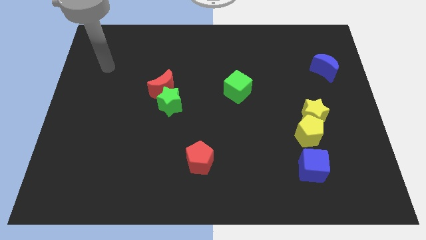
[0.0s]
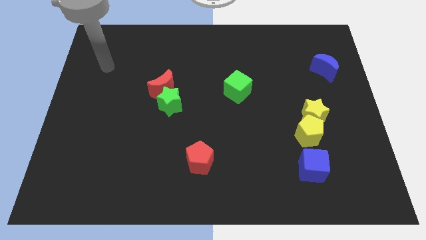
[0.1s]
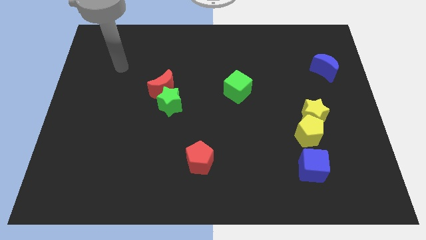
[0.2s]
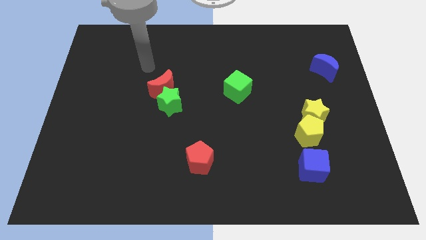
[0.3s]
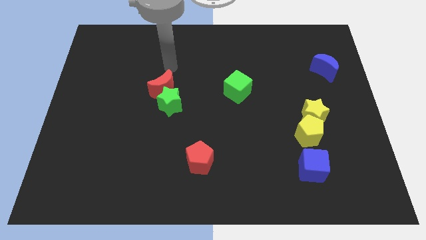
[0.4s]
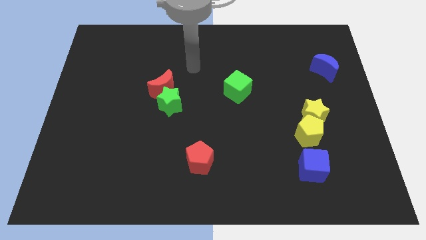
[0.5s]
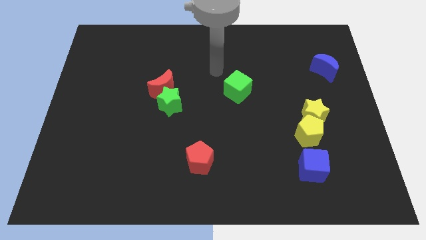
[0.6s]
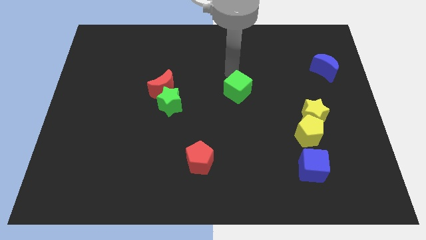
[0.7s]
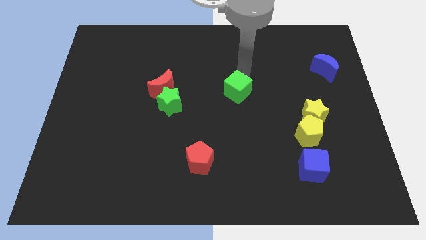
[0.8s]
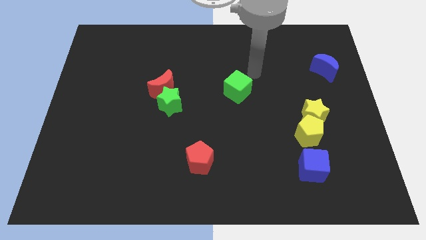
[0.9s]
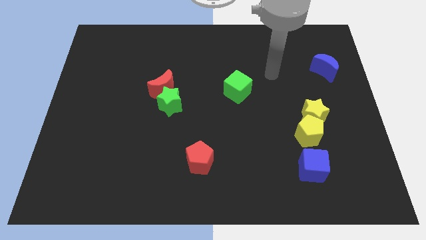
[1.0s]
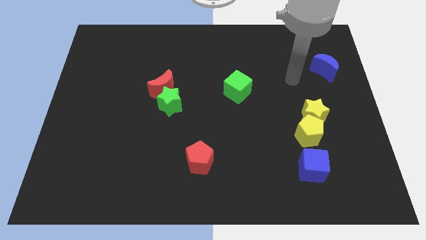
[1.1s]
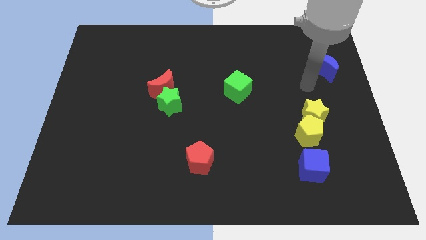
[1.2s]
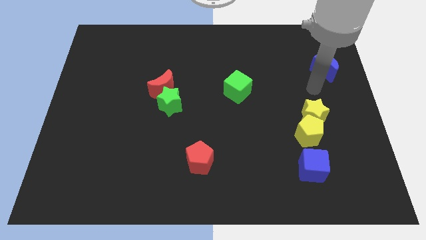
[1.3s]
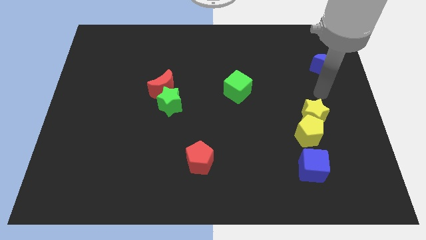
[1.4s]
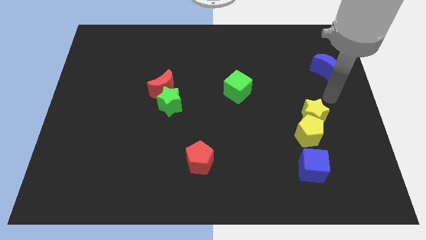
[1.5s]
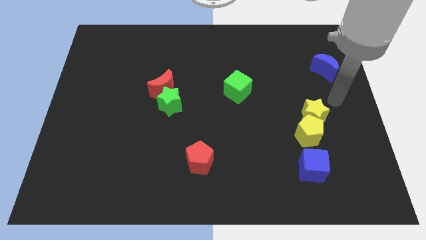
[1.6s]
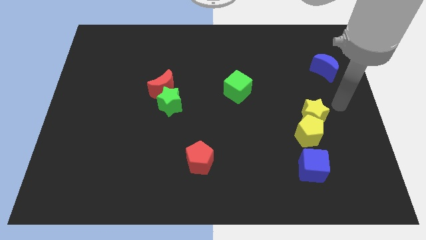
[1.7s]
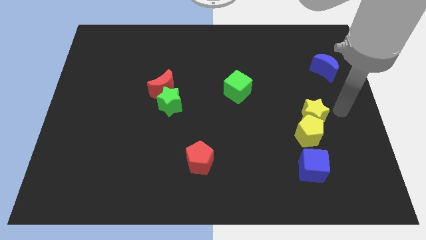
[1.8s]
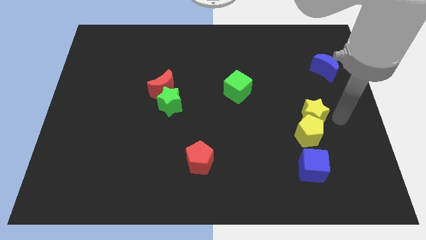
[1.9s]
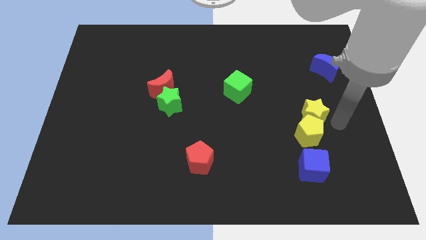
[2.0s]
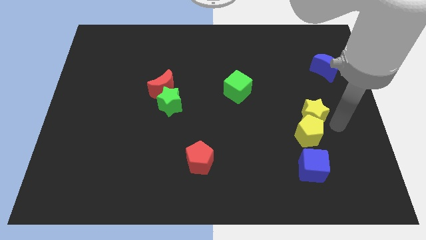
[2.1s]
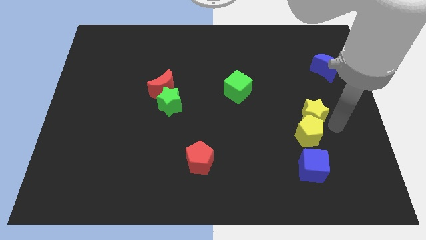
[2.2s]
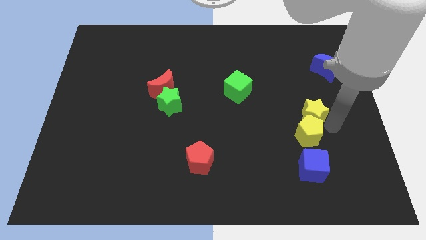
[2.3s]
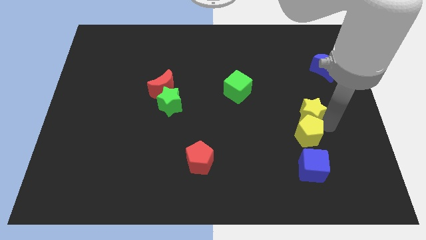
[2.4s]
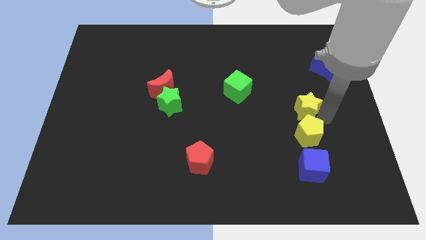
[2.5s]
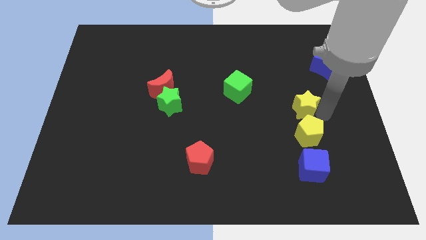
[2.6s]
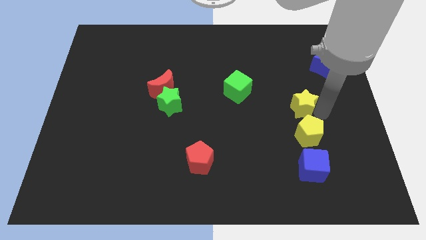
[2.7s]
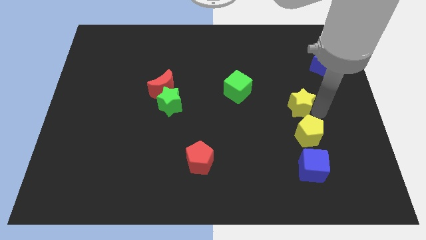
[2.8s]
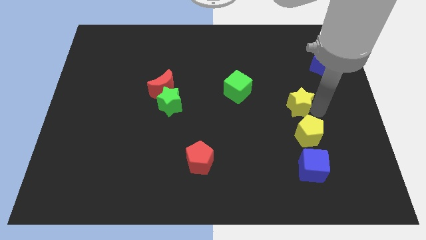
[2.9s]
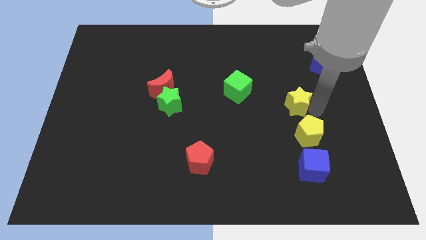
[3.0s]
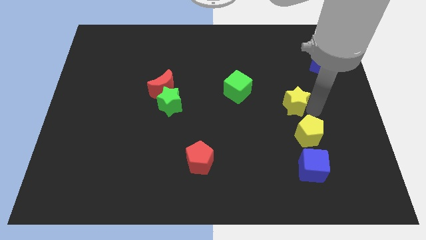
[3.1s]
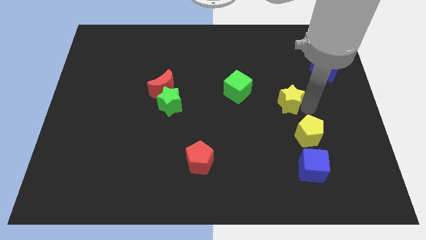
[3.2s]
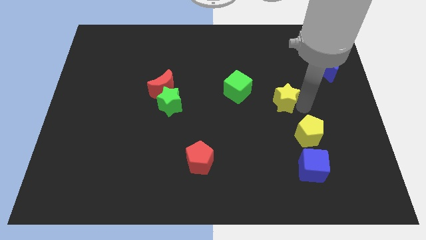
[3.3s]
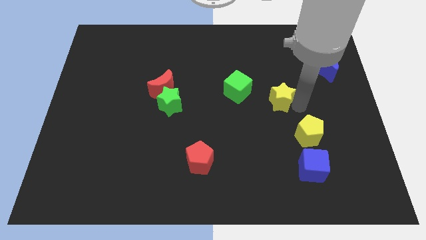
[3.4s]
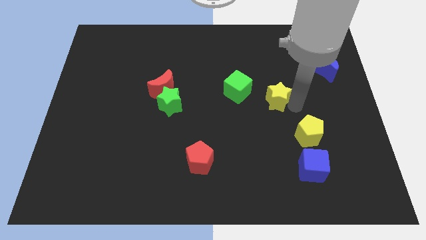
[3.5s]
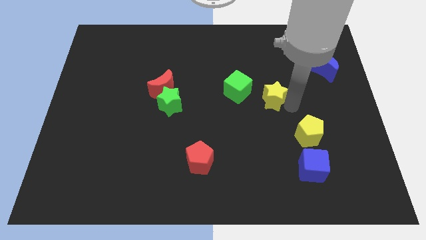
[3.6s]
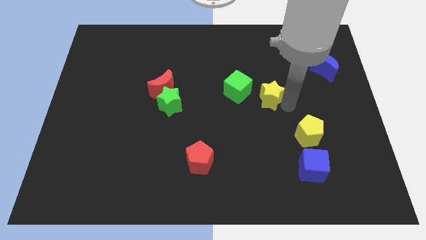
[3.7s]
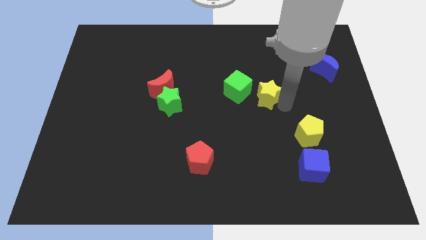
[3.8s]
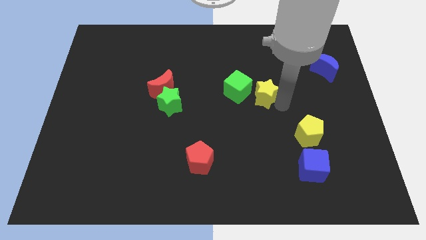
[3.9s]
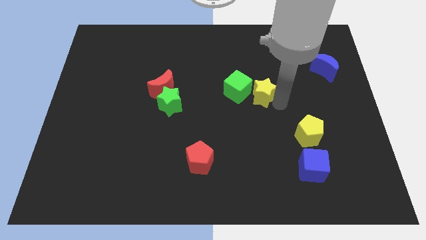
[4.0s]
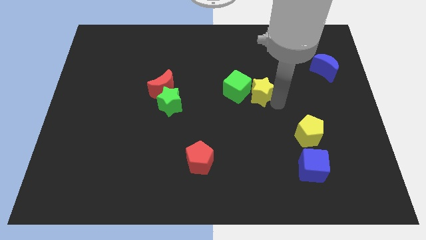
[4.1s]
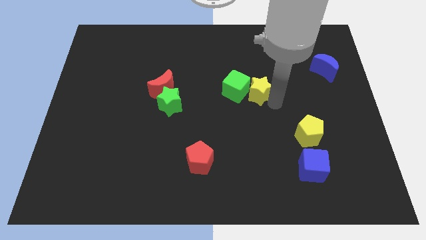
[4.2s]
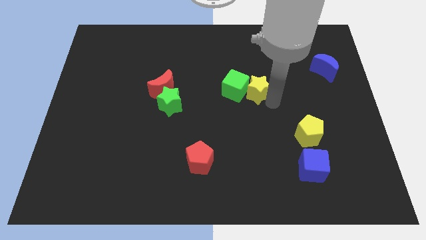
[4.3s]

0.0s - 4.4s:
put the yellow star close to the green cube

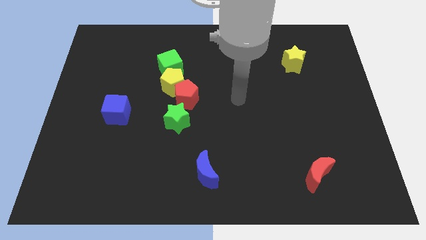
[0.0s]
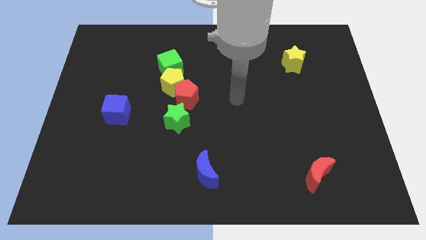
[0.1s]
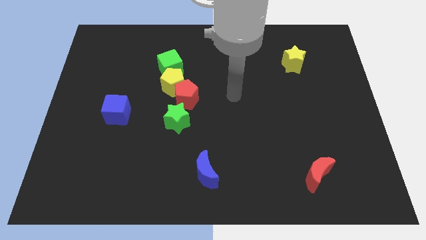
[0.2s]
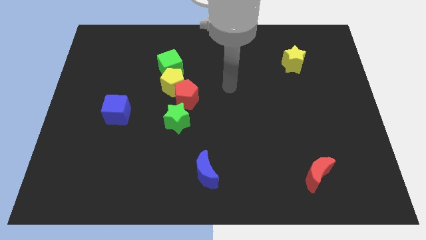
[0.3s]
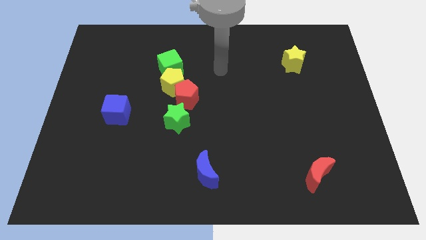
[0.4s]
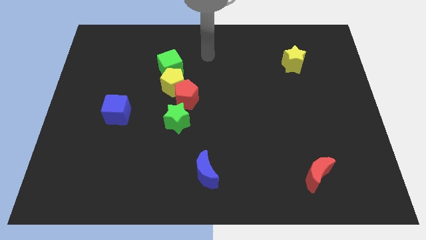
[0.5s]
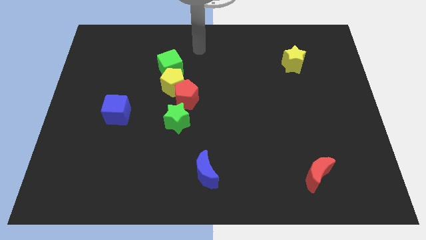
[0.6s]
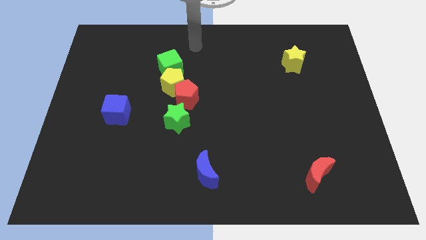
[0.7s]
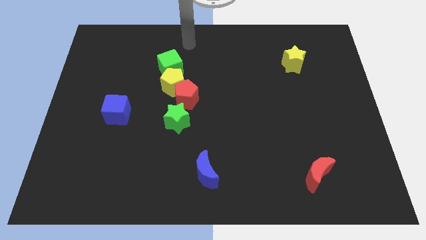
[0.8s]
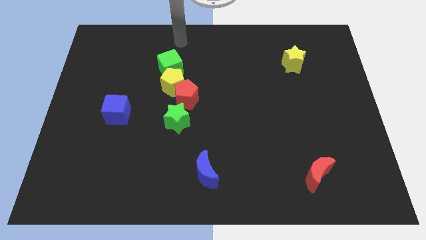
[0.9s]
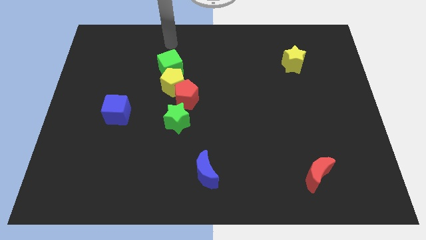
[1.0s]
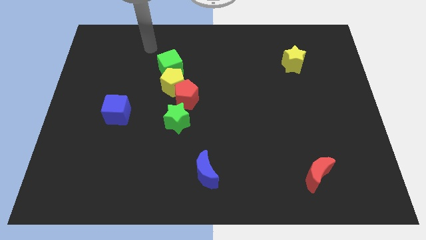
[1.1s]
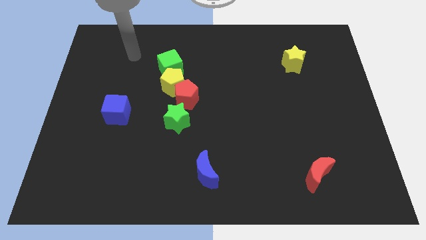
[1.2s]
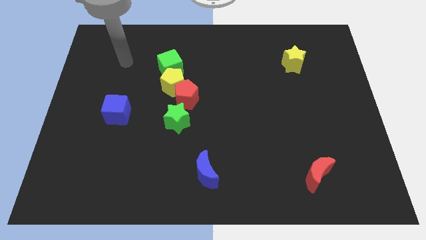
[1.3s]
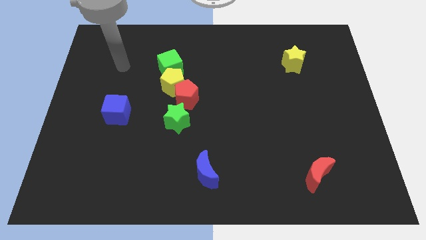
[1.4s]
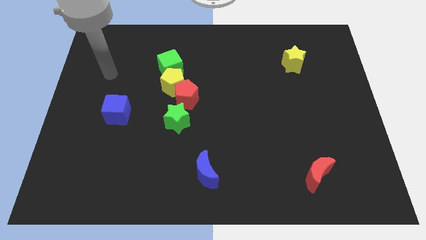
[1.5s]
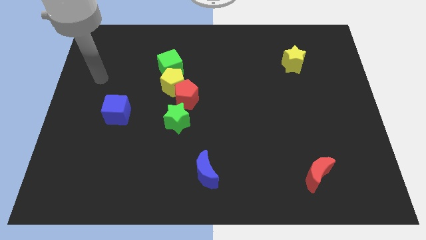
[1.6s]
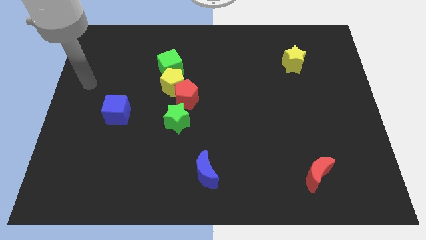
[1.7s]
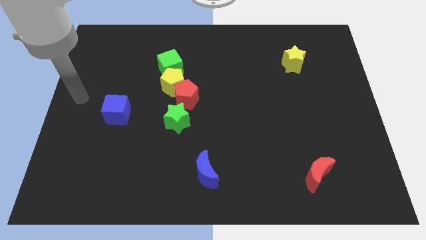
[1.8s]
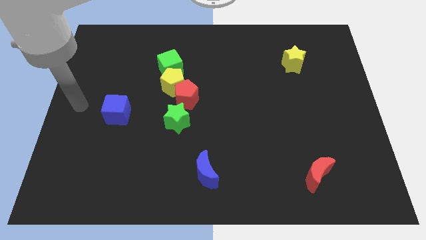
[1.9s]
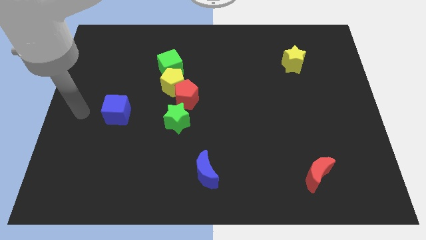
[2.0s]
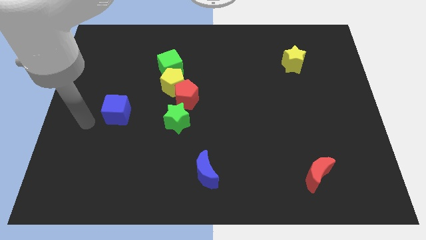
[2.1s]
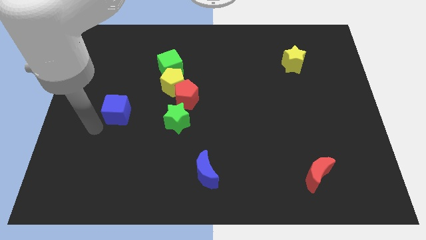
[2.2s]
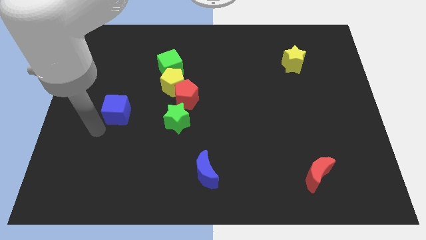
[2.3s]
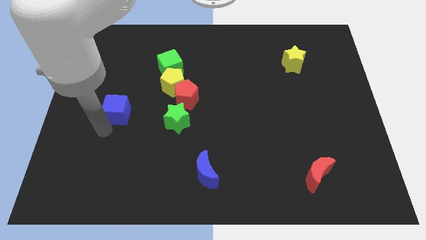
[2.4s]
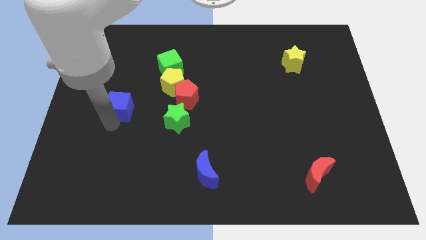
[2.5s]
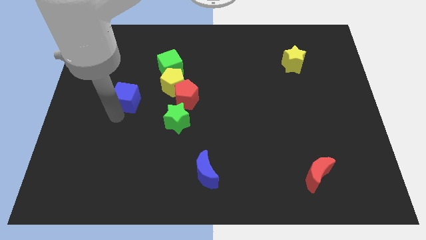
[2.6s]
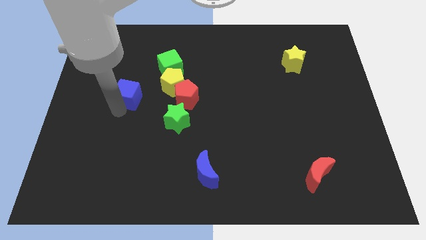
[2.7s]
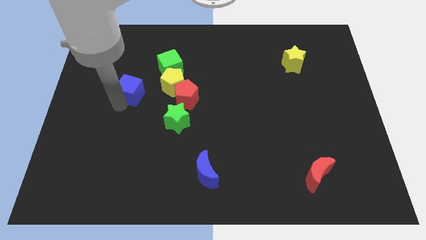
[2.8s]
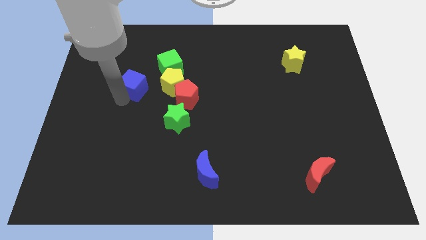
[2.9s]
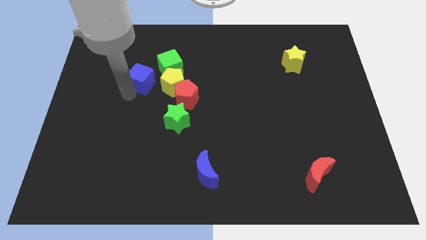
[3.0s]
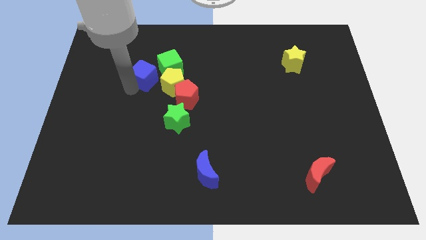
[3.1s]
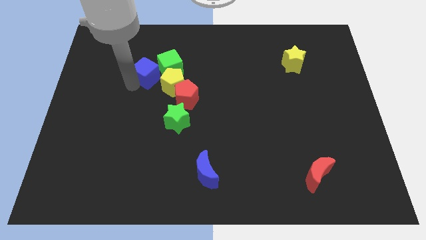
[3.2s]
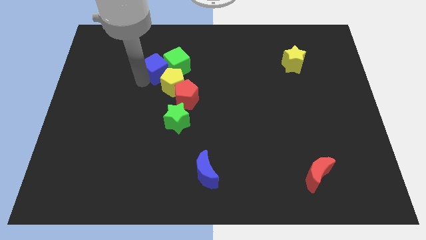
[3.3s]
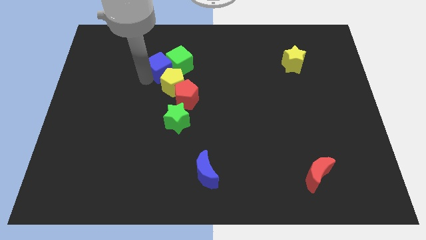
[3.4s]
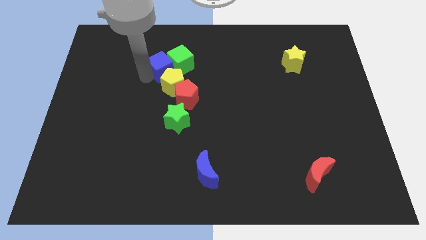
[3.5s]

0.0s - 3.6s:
put the blue cube towards the green cube

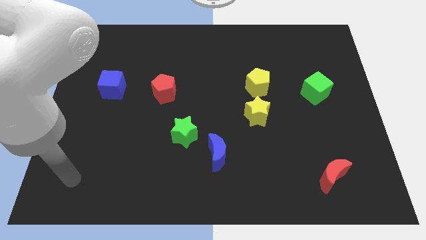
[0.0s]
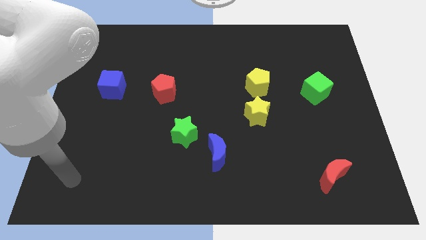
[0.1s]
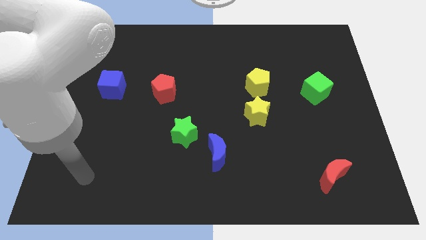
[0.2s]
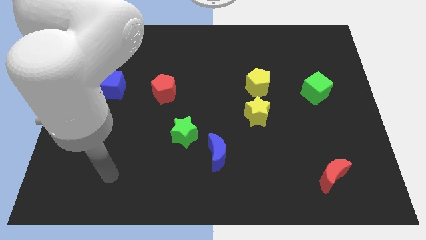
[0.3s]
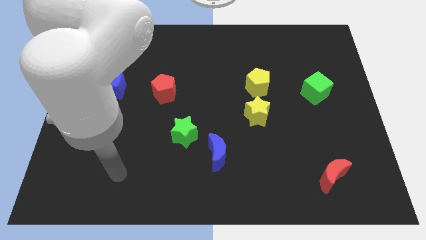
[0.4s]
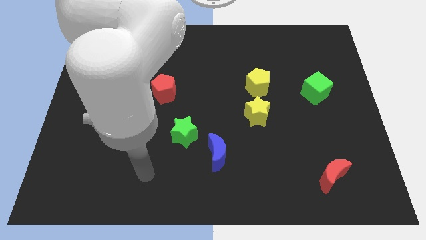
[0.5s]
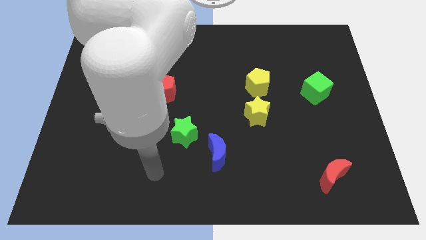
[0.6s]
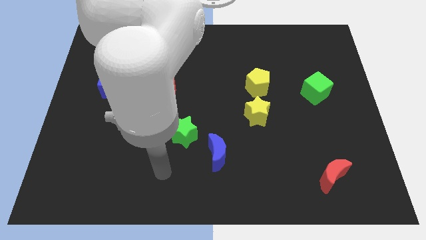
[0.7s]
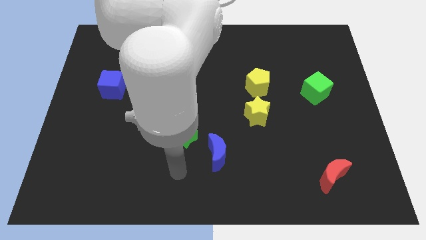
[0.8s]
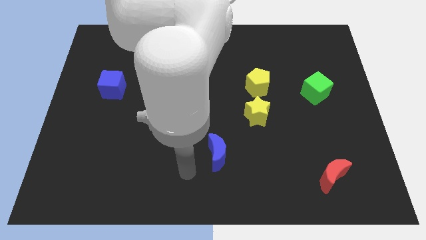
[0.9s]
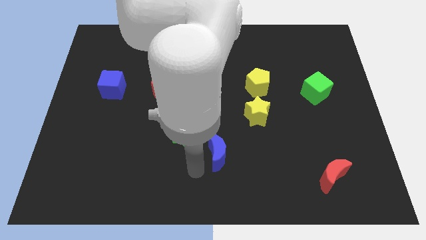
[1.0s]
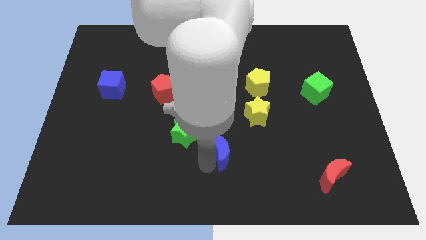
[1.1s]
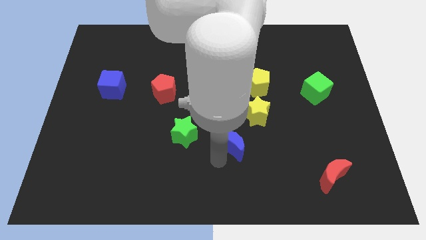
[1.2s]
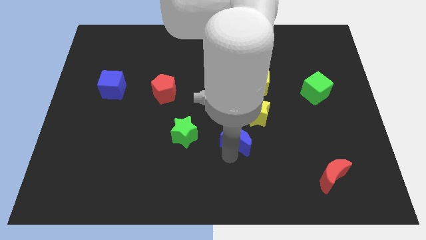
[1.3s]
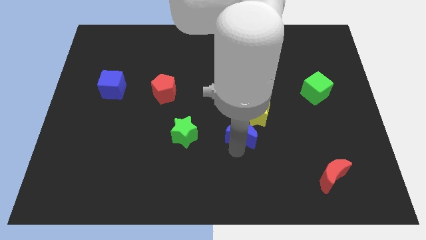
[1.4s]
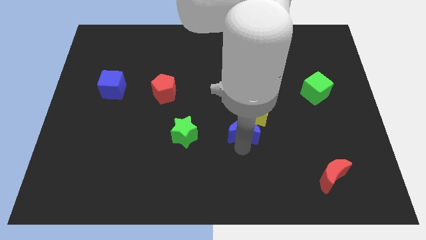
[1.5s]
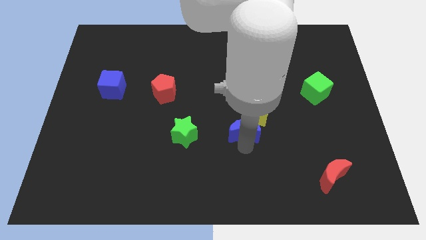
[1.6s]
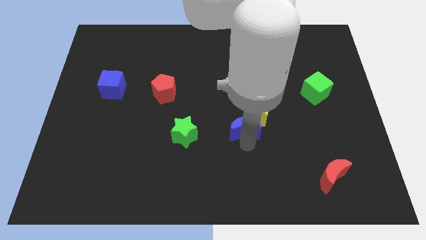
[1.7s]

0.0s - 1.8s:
slide the blue moon to the yellow star
